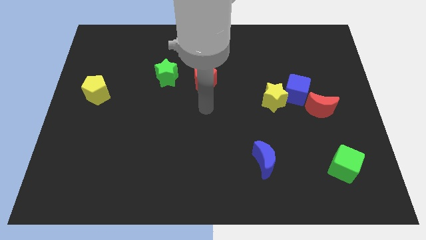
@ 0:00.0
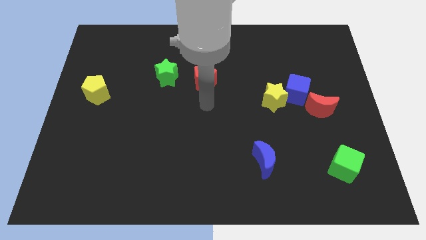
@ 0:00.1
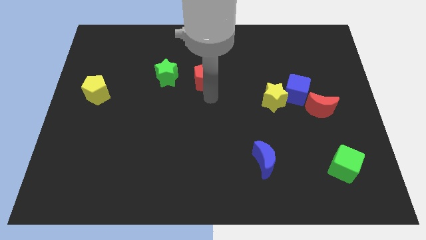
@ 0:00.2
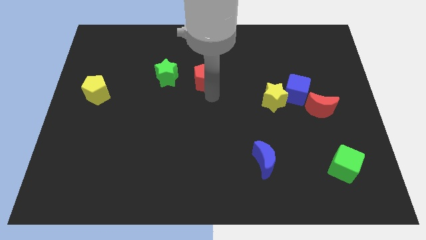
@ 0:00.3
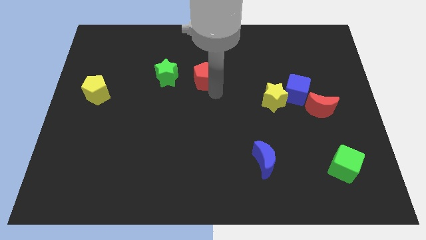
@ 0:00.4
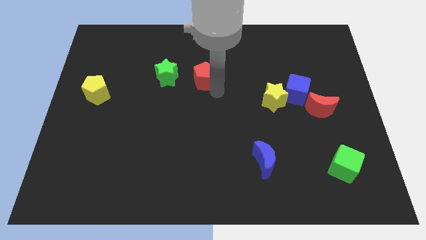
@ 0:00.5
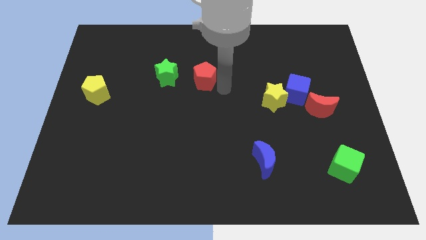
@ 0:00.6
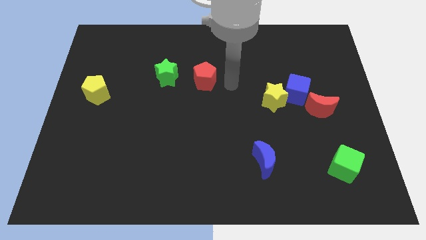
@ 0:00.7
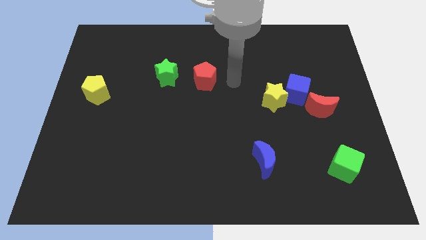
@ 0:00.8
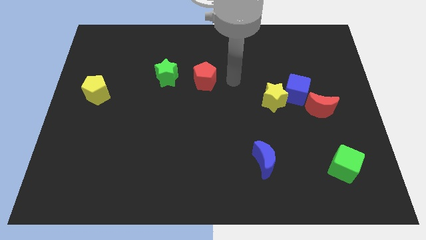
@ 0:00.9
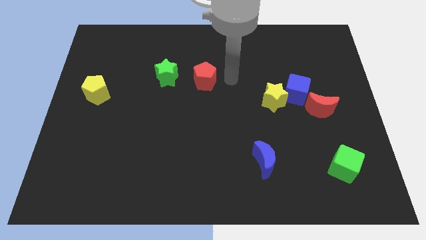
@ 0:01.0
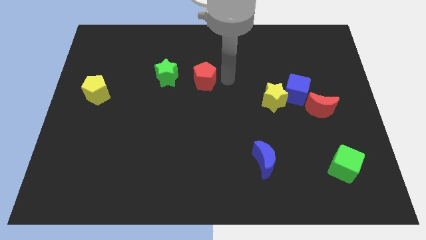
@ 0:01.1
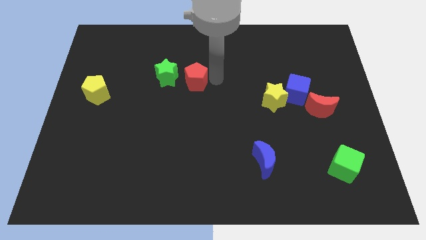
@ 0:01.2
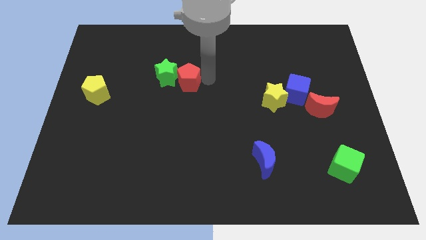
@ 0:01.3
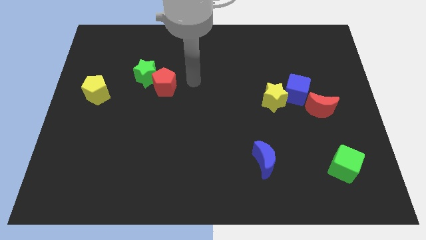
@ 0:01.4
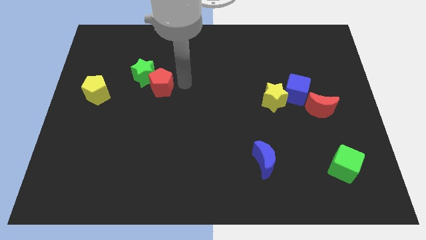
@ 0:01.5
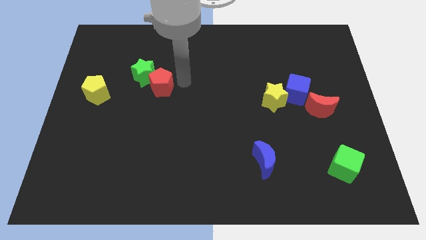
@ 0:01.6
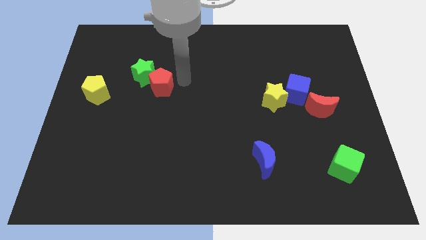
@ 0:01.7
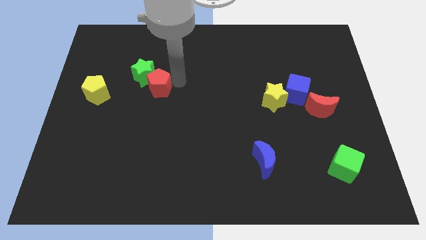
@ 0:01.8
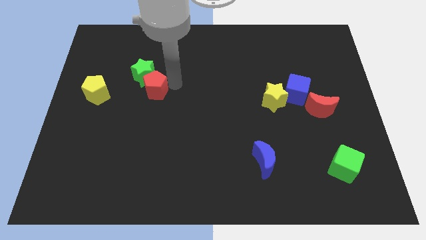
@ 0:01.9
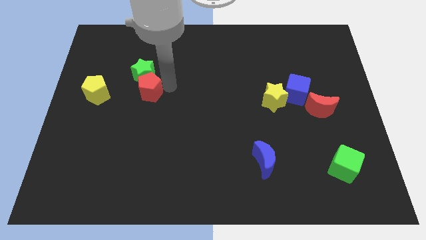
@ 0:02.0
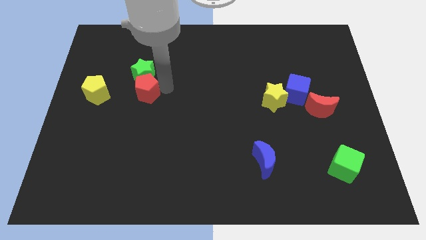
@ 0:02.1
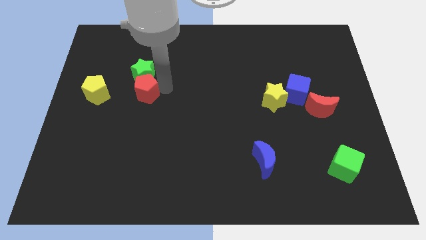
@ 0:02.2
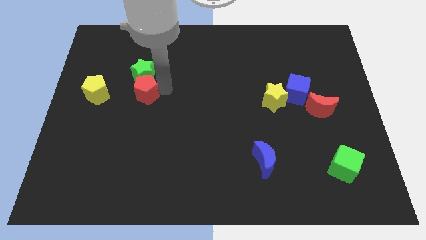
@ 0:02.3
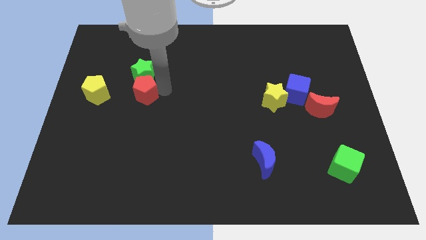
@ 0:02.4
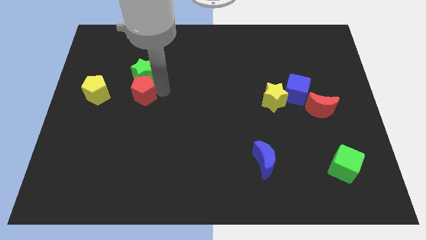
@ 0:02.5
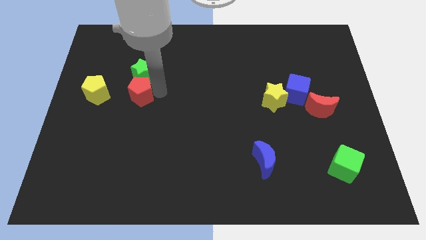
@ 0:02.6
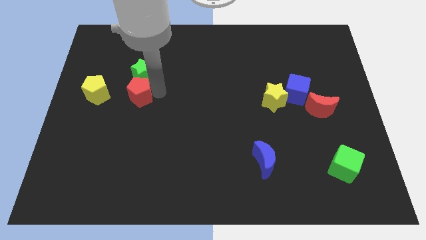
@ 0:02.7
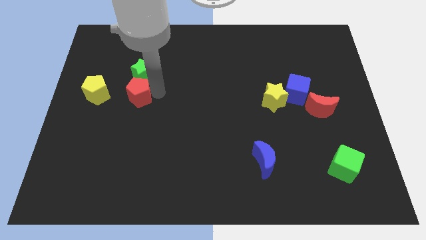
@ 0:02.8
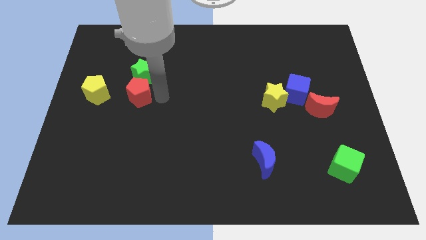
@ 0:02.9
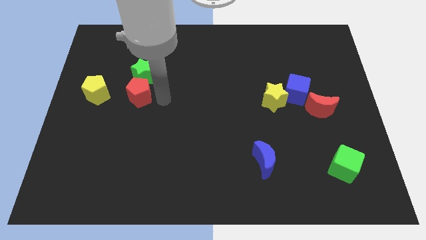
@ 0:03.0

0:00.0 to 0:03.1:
push the green star and red pentagon towards the left side of the board

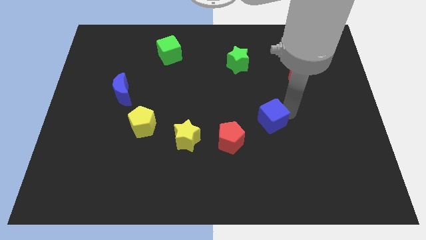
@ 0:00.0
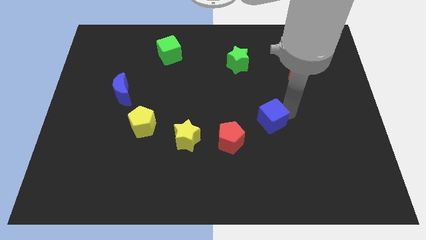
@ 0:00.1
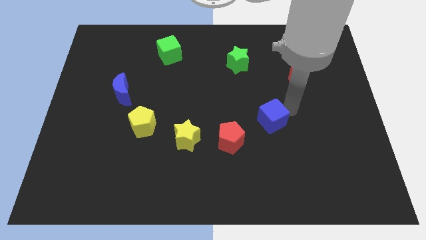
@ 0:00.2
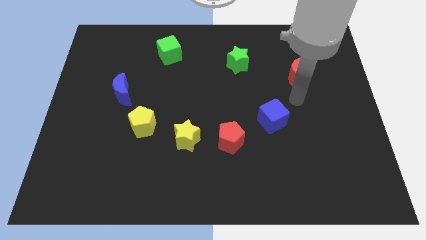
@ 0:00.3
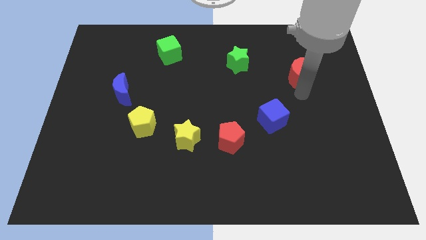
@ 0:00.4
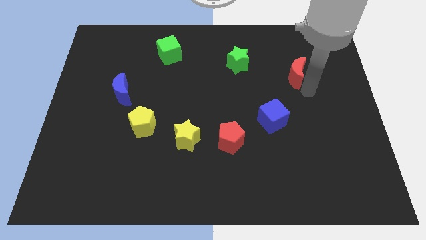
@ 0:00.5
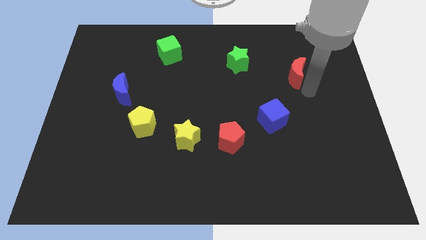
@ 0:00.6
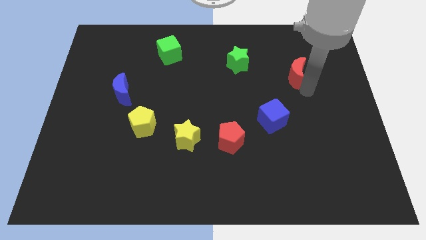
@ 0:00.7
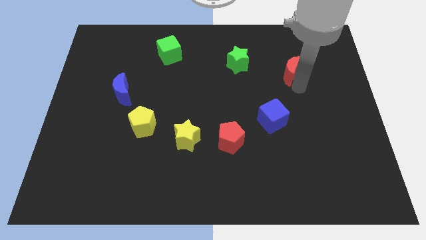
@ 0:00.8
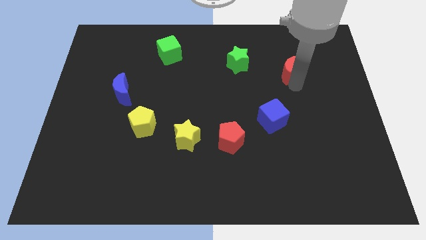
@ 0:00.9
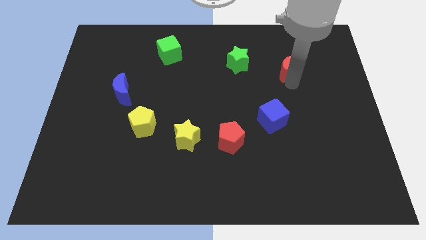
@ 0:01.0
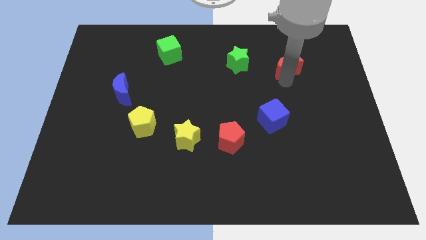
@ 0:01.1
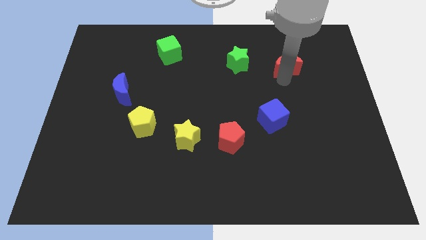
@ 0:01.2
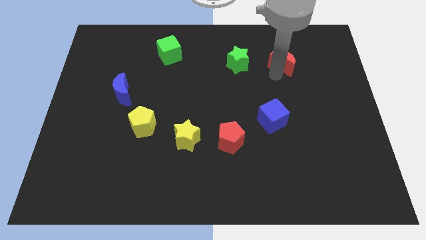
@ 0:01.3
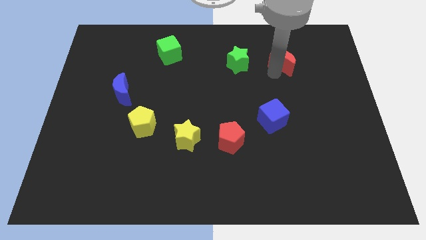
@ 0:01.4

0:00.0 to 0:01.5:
push the red crescent towards the green star

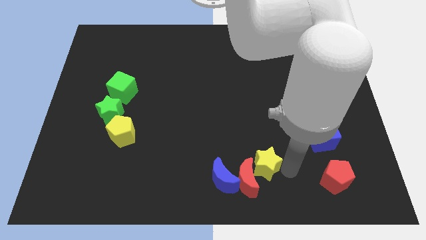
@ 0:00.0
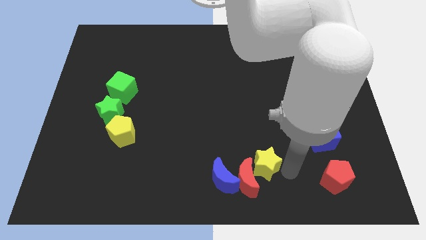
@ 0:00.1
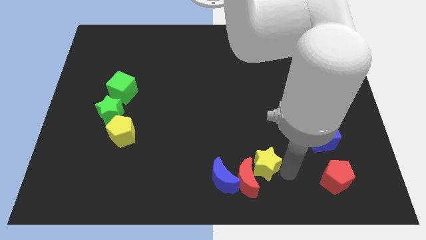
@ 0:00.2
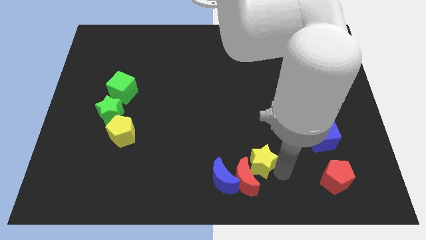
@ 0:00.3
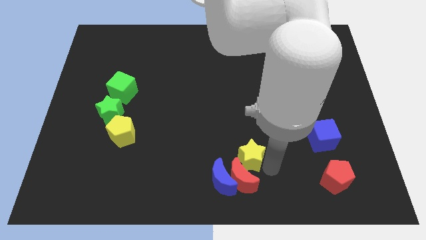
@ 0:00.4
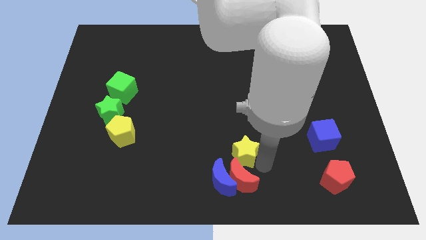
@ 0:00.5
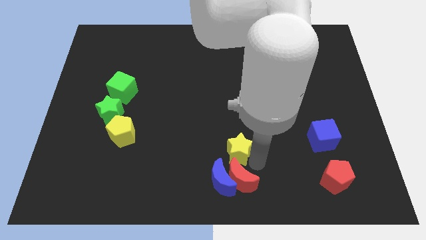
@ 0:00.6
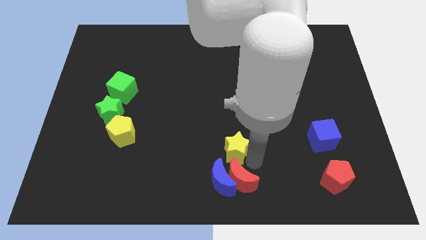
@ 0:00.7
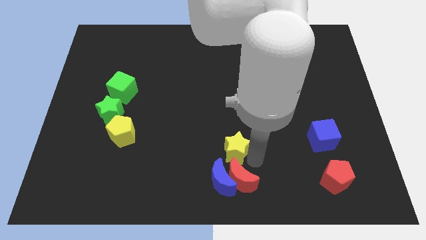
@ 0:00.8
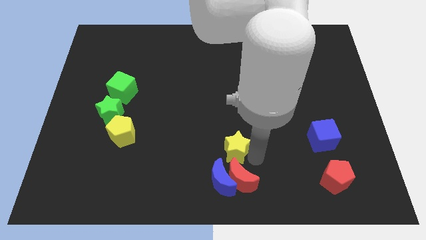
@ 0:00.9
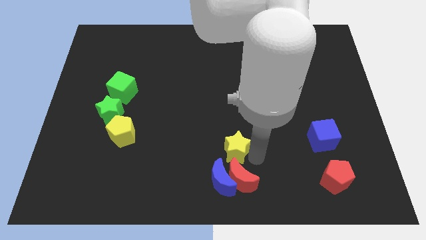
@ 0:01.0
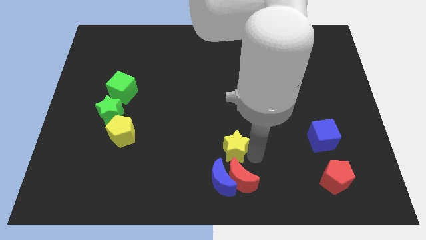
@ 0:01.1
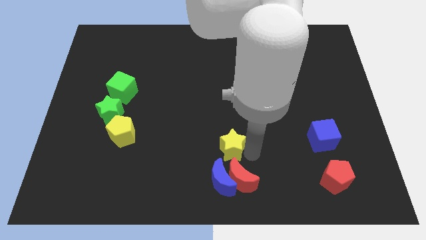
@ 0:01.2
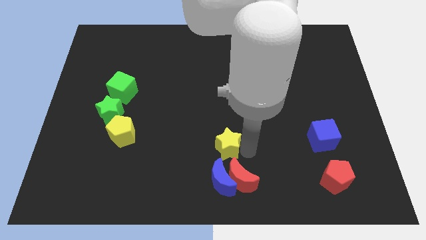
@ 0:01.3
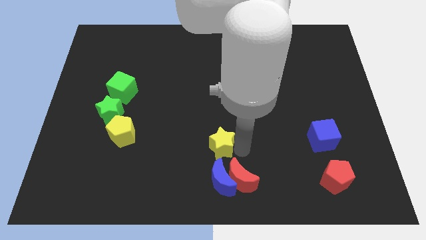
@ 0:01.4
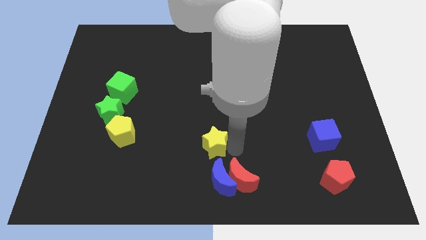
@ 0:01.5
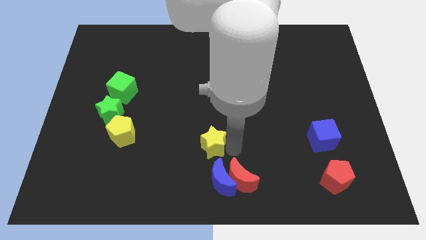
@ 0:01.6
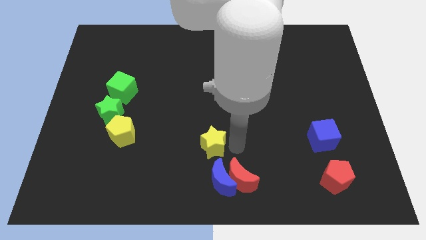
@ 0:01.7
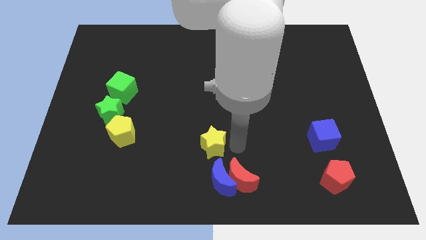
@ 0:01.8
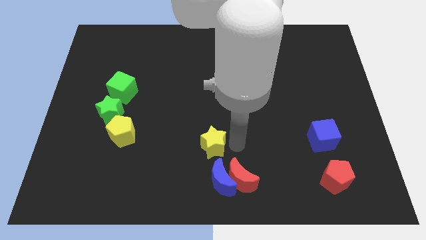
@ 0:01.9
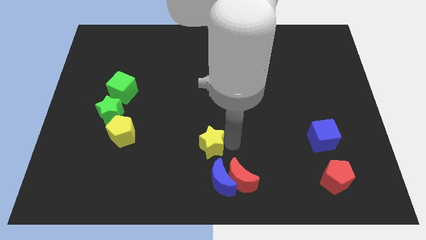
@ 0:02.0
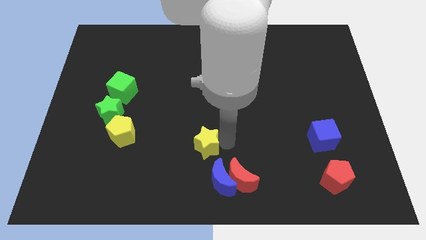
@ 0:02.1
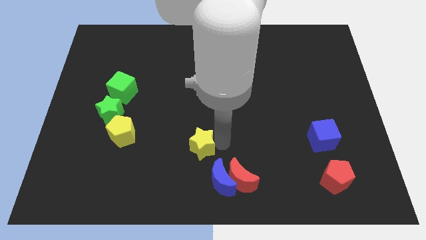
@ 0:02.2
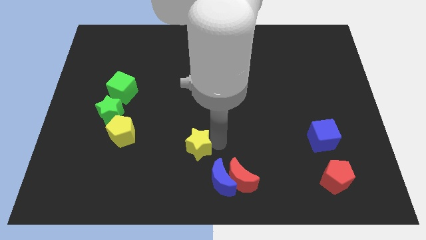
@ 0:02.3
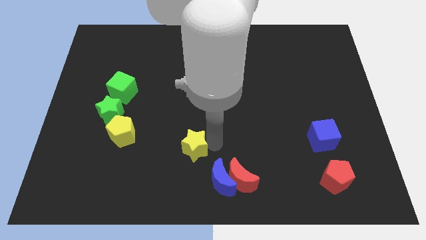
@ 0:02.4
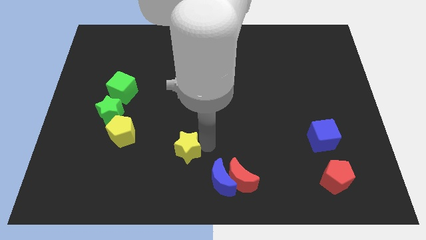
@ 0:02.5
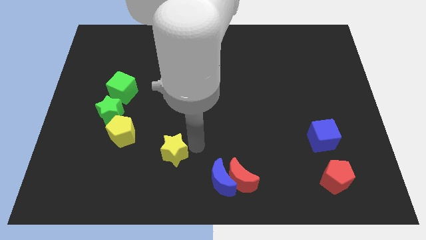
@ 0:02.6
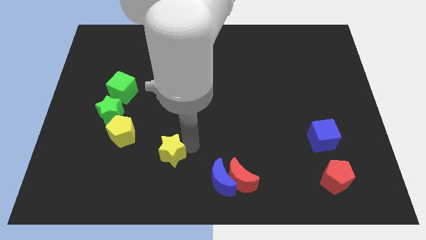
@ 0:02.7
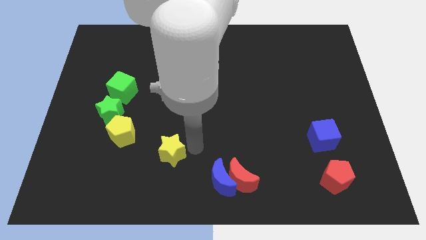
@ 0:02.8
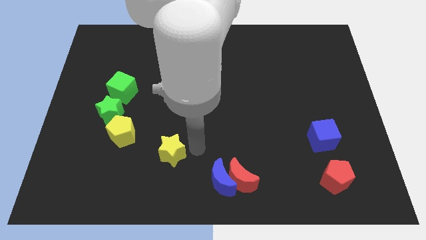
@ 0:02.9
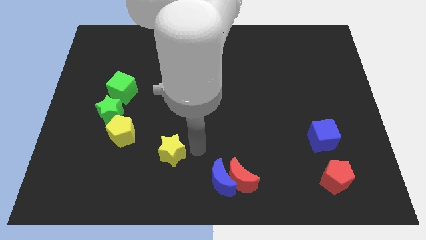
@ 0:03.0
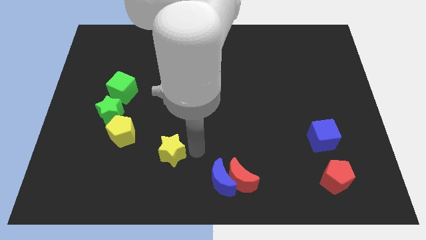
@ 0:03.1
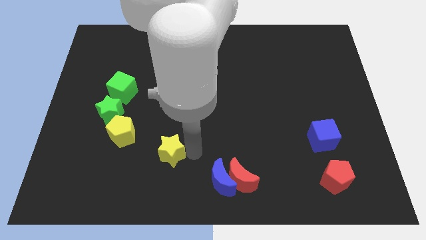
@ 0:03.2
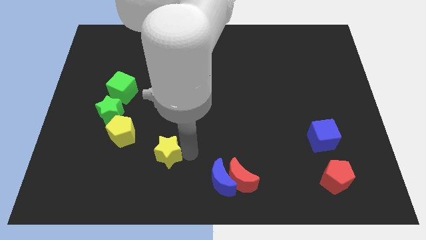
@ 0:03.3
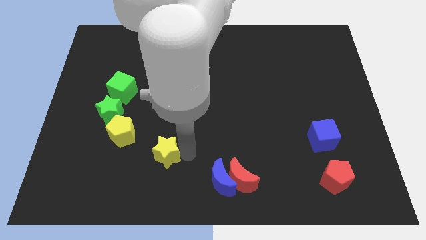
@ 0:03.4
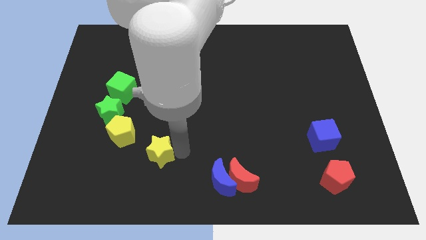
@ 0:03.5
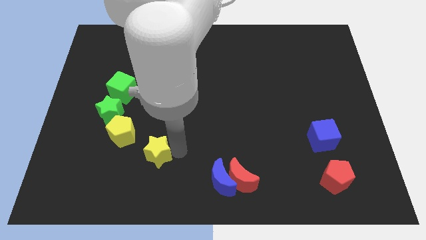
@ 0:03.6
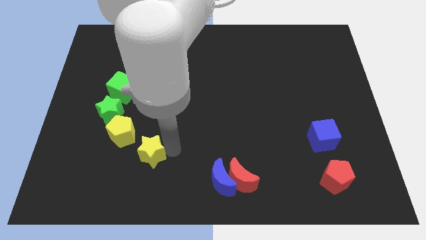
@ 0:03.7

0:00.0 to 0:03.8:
separate the yellow star from the red moon

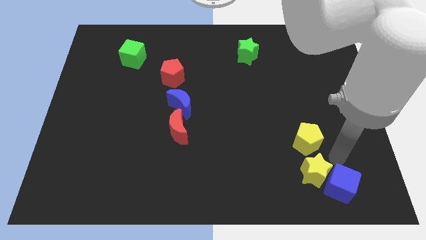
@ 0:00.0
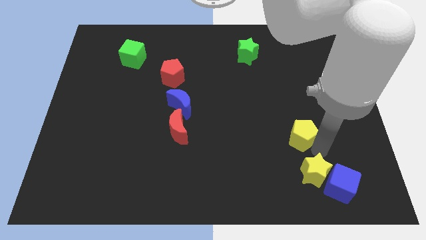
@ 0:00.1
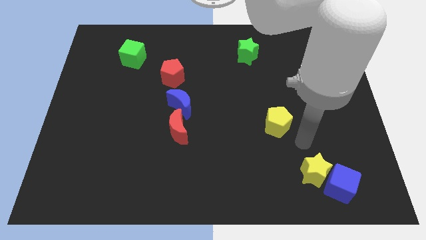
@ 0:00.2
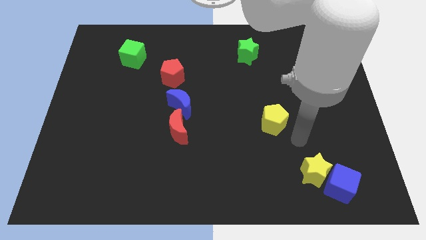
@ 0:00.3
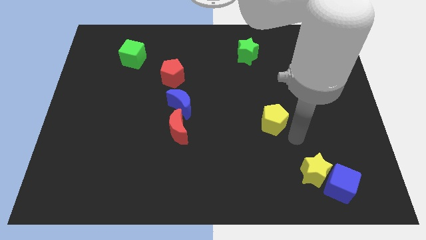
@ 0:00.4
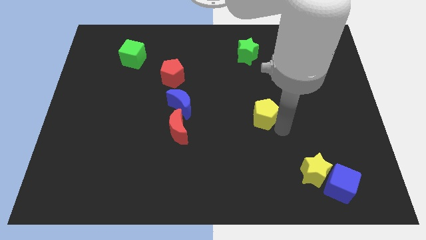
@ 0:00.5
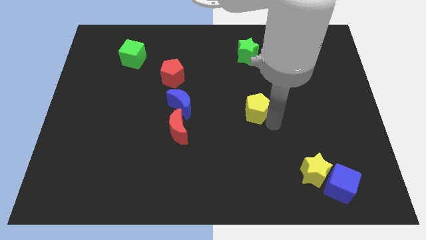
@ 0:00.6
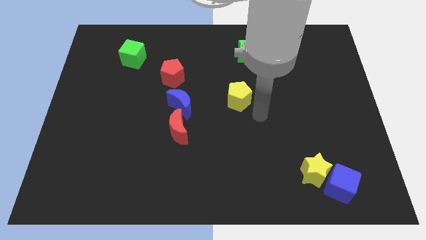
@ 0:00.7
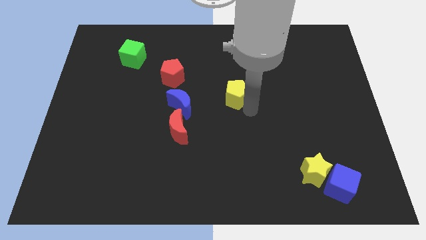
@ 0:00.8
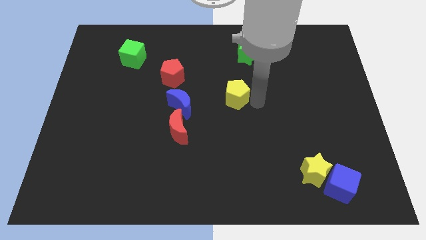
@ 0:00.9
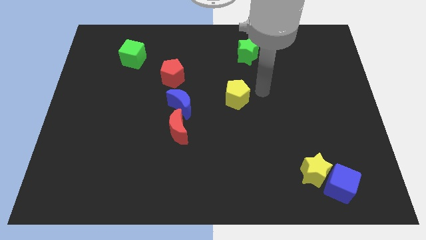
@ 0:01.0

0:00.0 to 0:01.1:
place the yellow pentagon to the right of the blue moon
